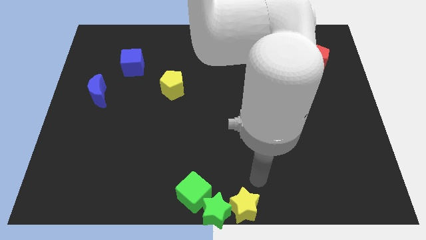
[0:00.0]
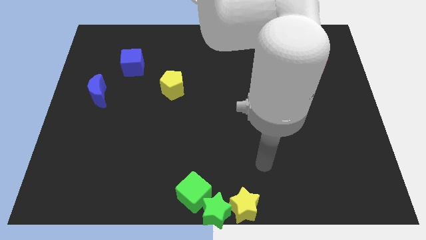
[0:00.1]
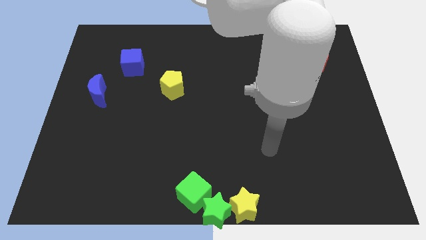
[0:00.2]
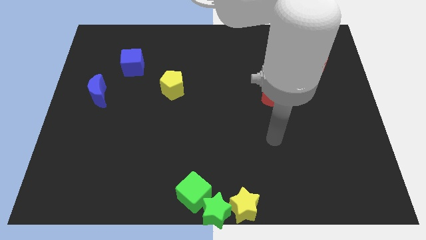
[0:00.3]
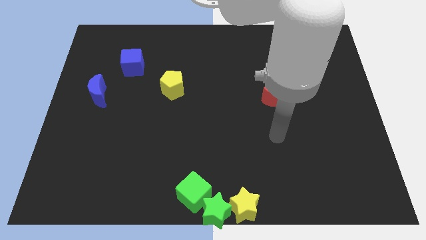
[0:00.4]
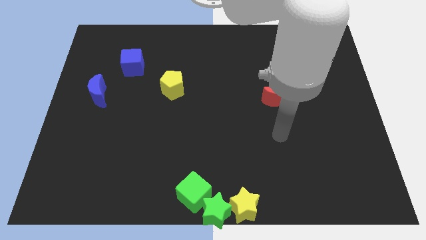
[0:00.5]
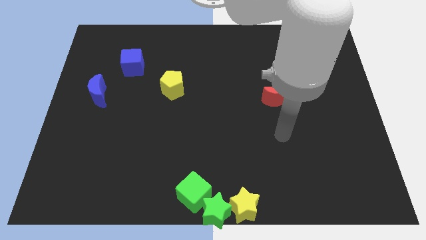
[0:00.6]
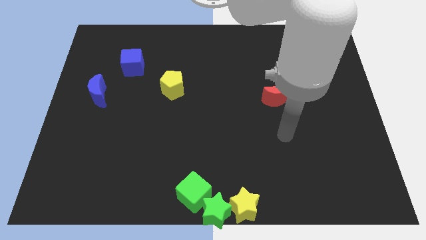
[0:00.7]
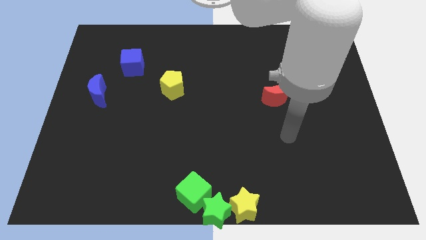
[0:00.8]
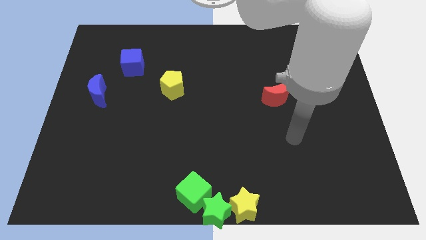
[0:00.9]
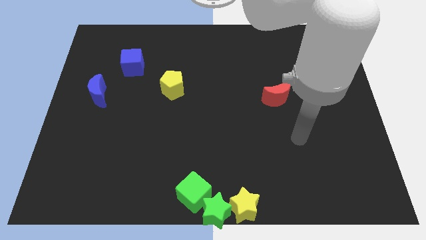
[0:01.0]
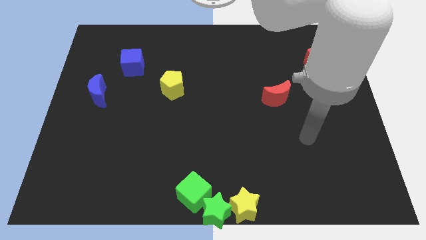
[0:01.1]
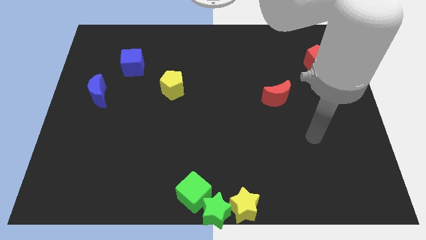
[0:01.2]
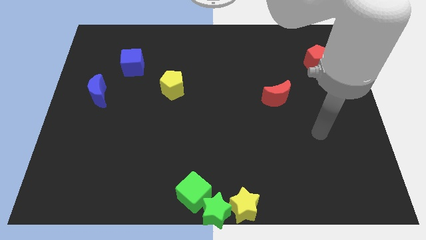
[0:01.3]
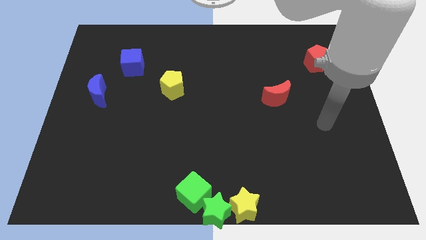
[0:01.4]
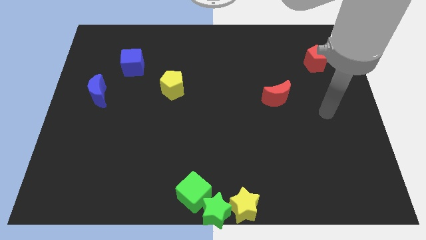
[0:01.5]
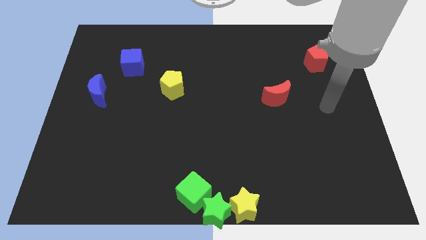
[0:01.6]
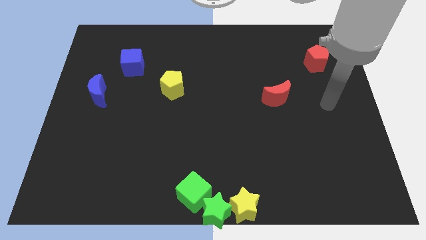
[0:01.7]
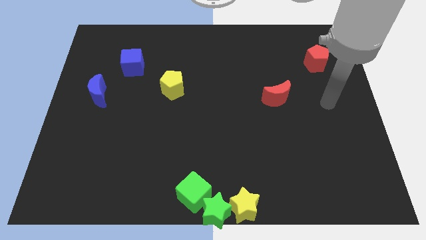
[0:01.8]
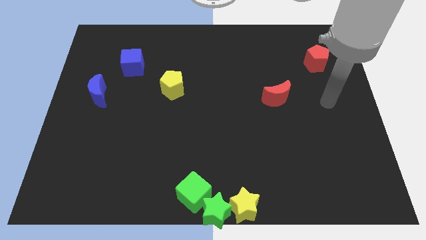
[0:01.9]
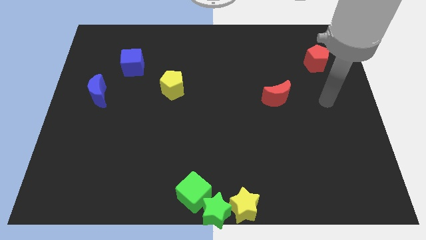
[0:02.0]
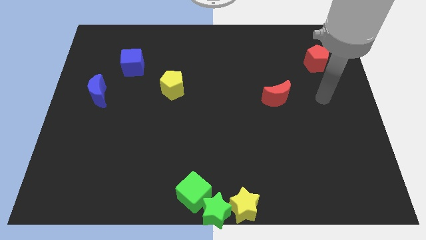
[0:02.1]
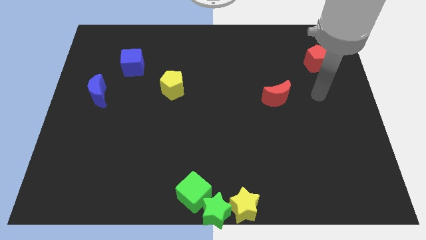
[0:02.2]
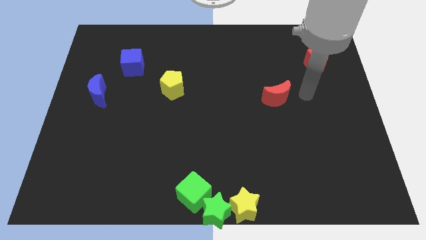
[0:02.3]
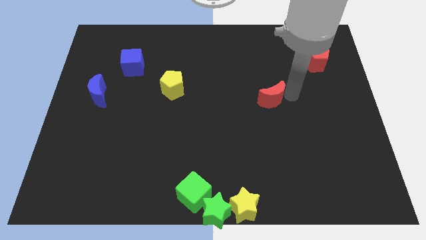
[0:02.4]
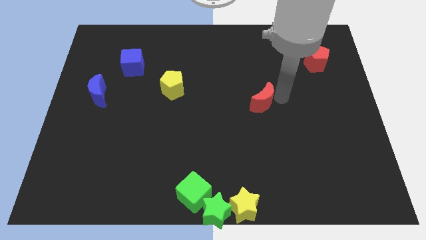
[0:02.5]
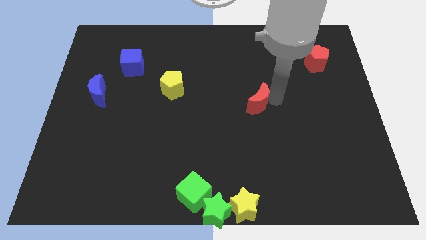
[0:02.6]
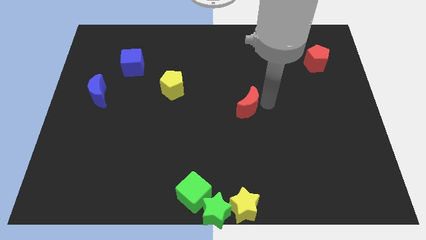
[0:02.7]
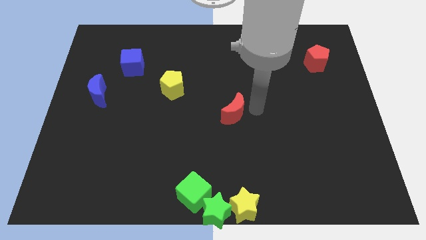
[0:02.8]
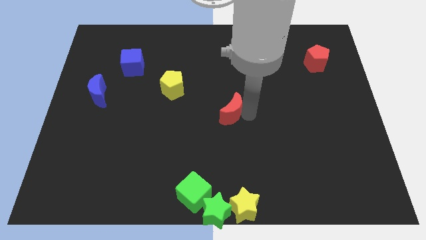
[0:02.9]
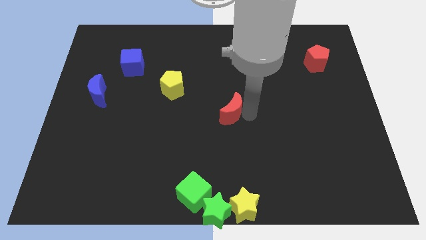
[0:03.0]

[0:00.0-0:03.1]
move the red crescent to the top of the green star

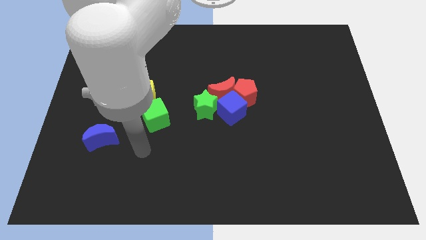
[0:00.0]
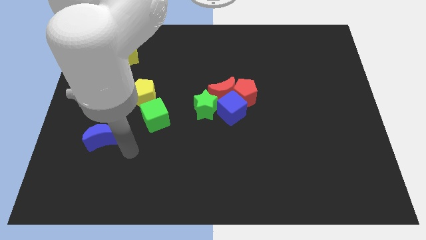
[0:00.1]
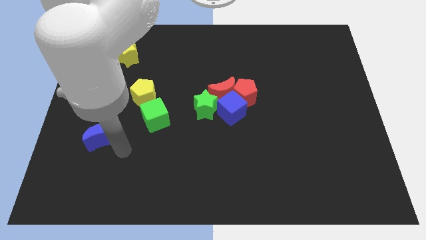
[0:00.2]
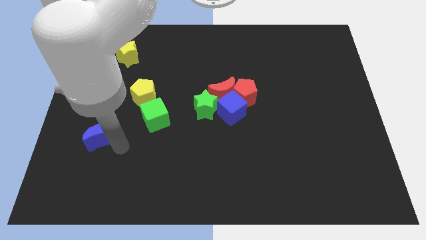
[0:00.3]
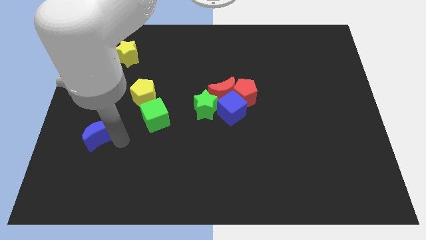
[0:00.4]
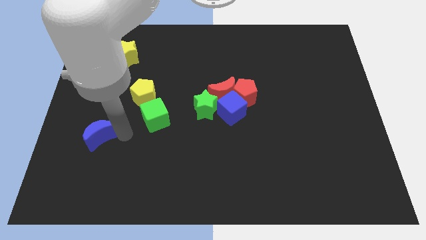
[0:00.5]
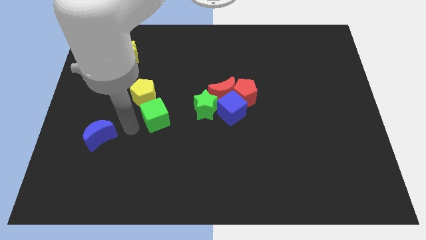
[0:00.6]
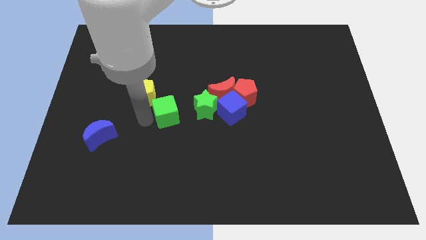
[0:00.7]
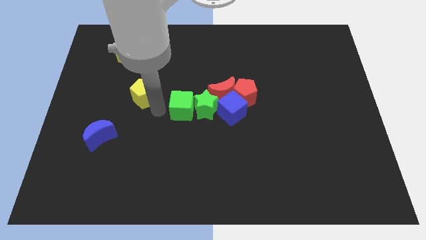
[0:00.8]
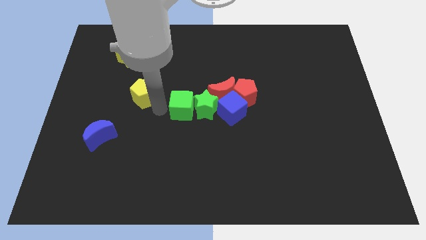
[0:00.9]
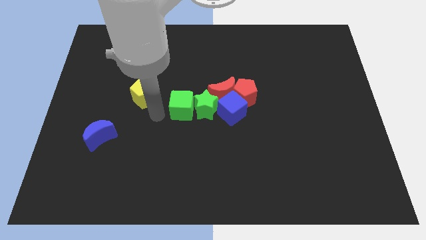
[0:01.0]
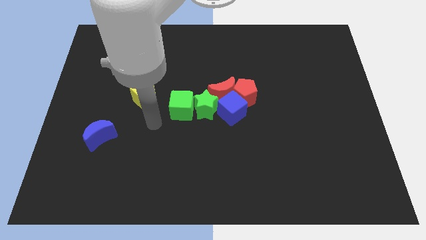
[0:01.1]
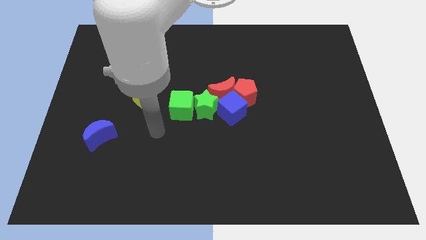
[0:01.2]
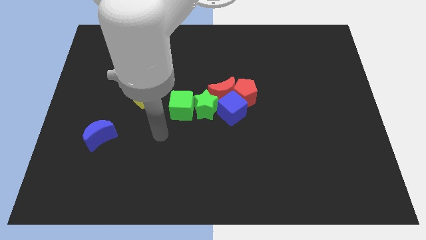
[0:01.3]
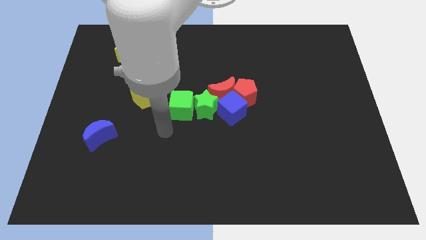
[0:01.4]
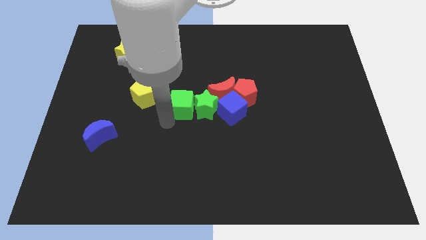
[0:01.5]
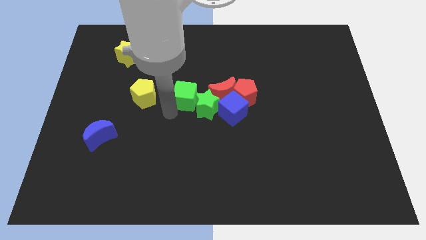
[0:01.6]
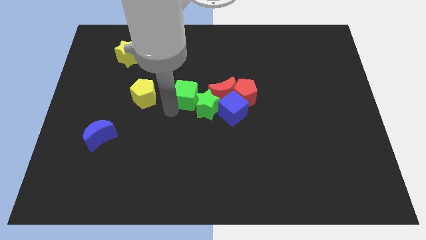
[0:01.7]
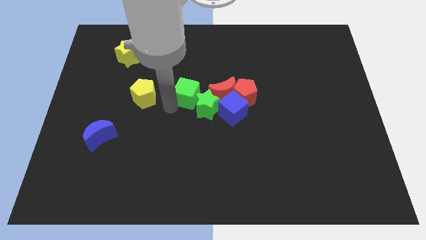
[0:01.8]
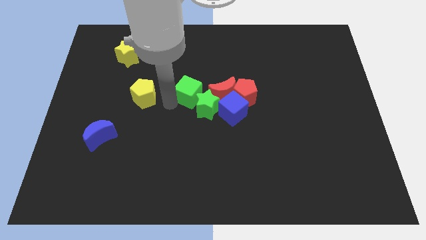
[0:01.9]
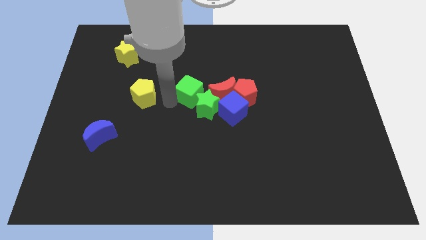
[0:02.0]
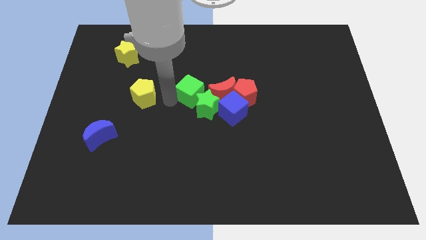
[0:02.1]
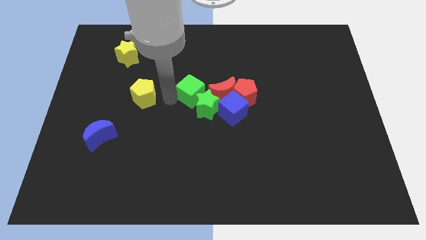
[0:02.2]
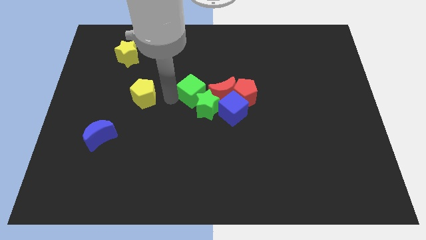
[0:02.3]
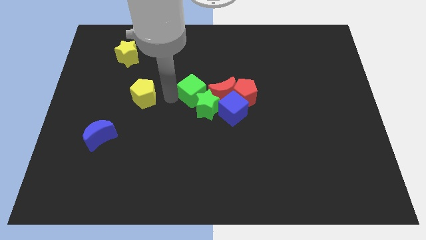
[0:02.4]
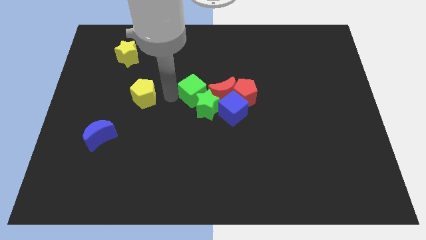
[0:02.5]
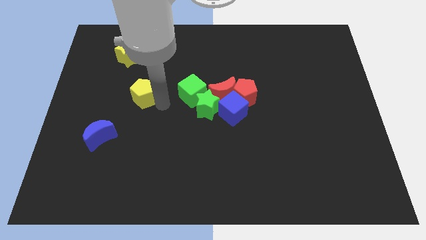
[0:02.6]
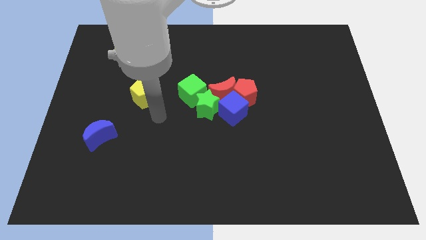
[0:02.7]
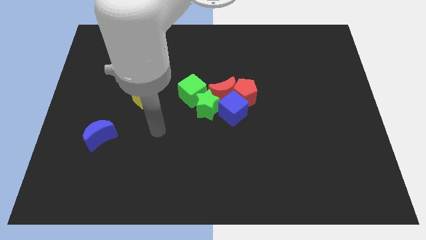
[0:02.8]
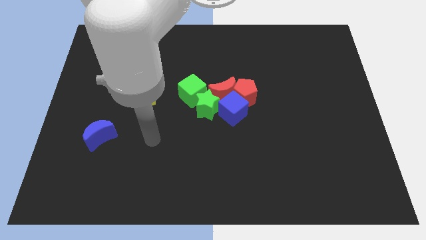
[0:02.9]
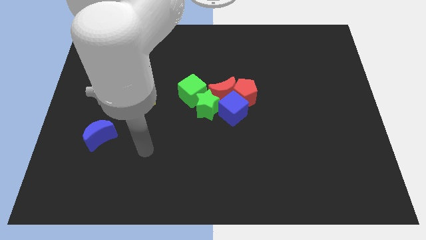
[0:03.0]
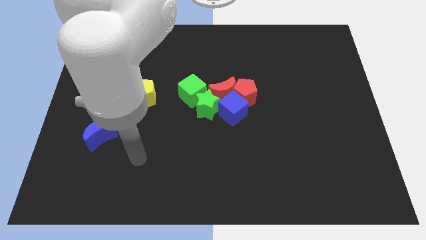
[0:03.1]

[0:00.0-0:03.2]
push the green cube into the green star

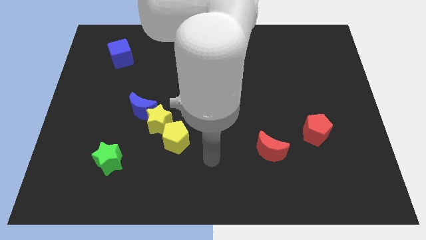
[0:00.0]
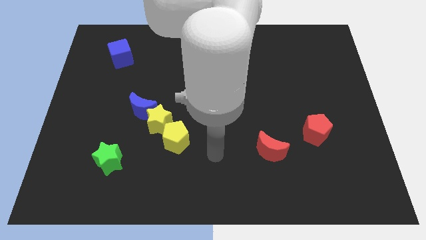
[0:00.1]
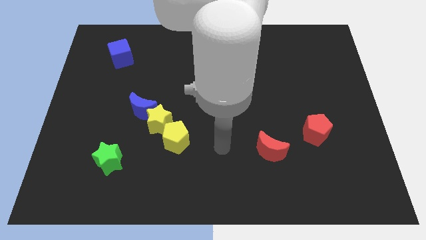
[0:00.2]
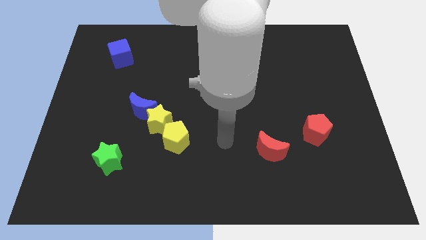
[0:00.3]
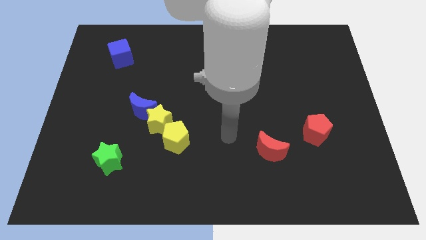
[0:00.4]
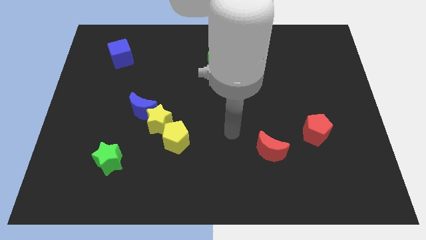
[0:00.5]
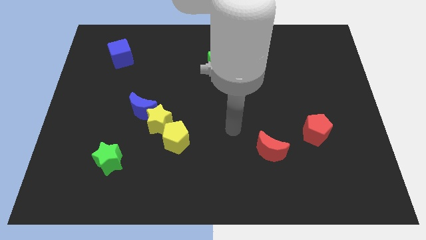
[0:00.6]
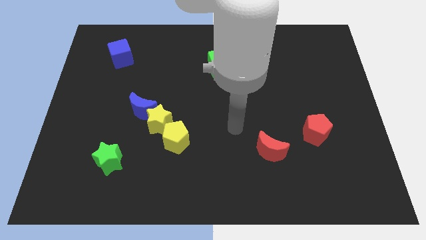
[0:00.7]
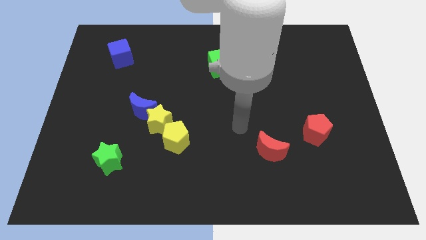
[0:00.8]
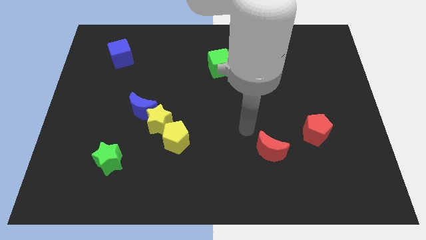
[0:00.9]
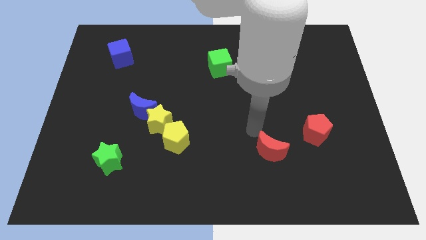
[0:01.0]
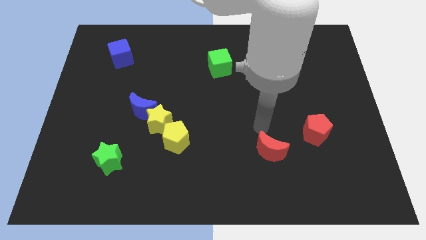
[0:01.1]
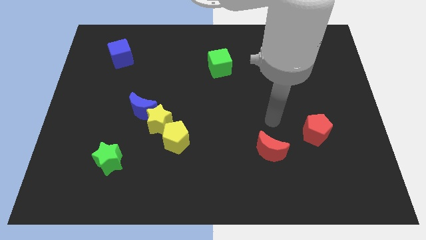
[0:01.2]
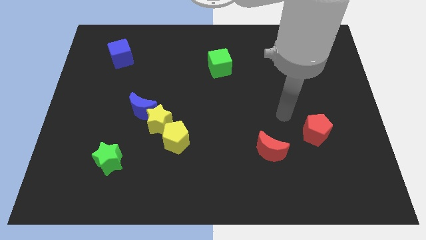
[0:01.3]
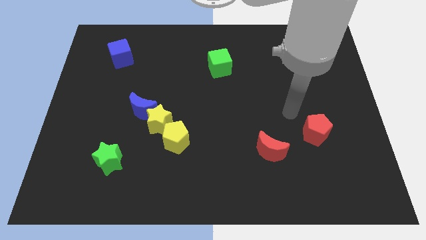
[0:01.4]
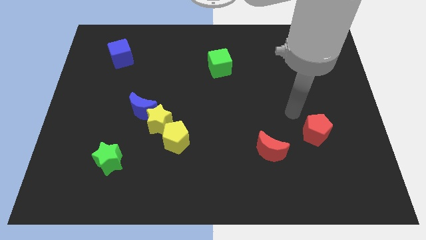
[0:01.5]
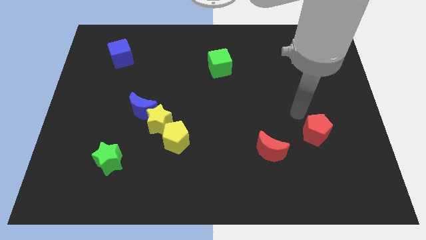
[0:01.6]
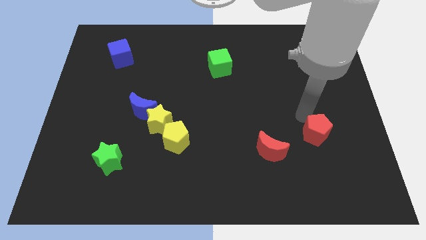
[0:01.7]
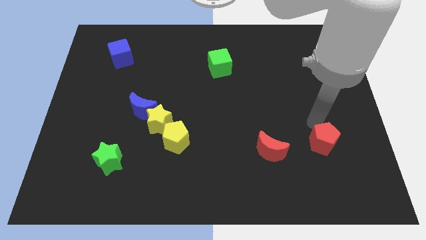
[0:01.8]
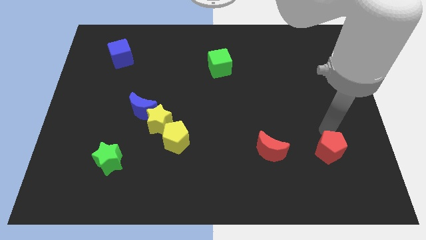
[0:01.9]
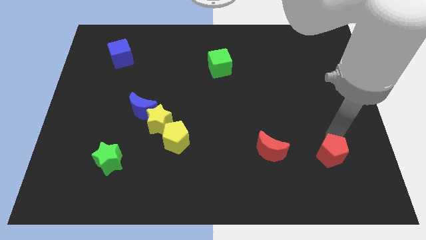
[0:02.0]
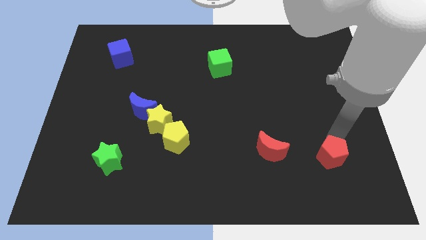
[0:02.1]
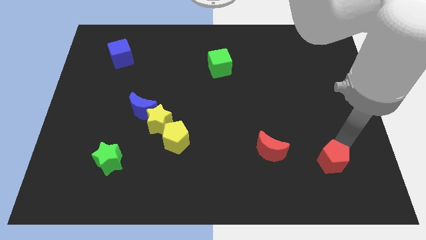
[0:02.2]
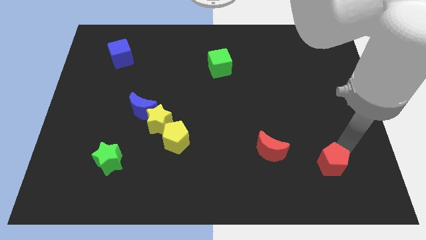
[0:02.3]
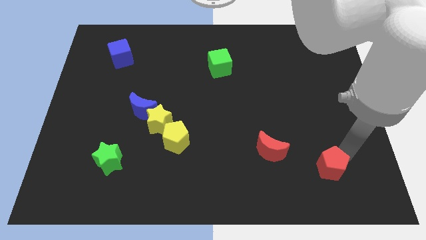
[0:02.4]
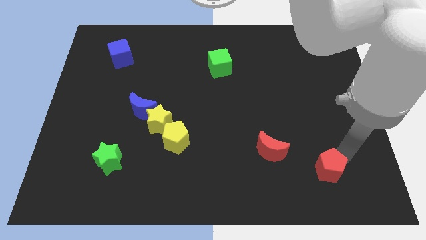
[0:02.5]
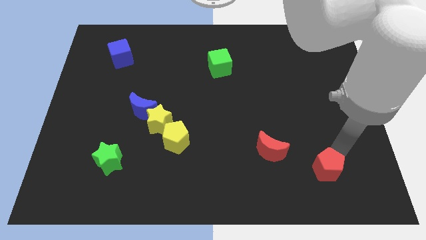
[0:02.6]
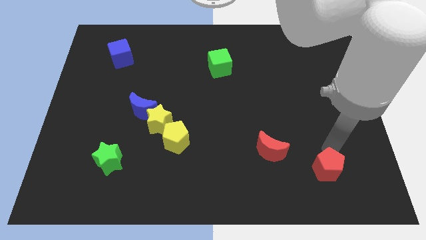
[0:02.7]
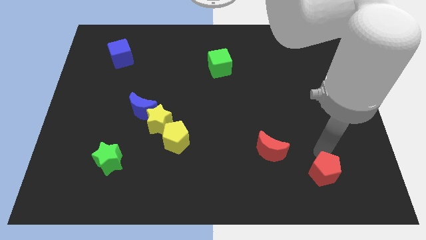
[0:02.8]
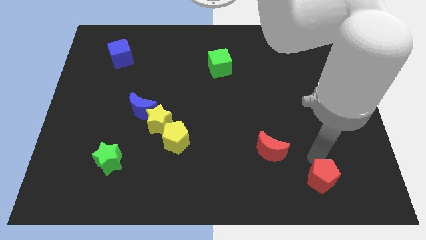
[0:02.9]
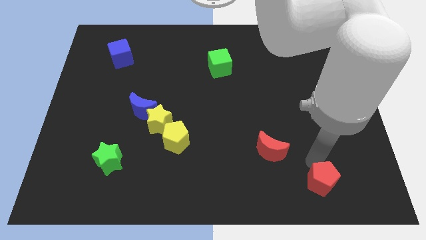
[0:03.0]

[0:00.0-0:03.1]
push the red pentagon towards the bottom
